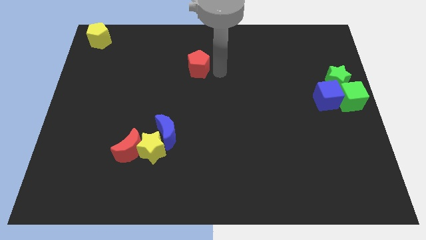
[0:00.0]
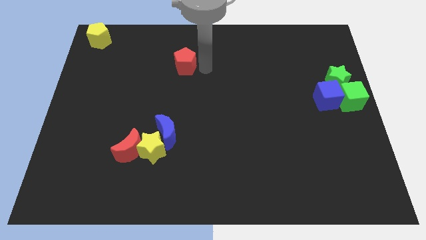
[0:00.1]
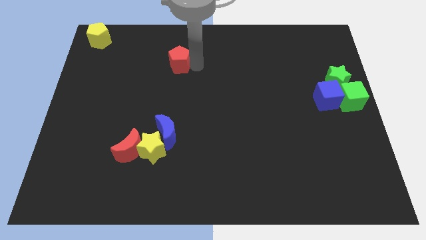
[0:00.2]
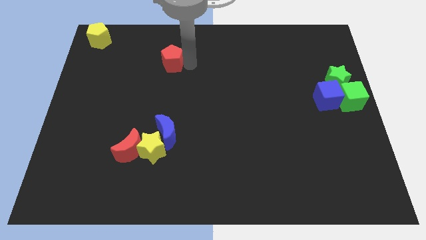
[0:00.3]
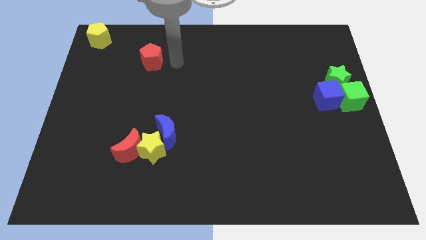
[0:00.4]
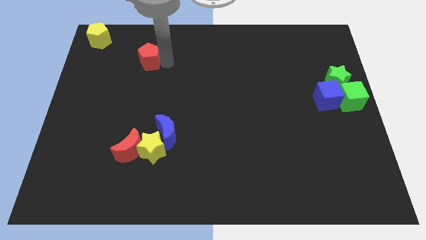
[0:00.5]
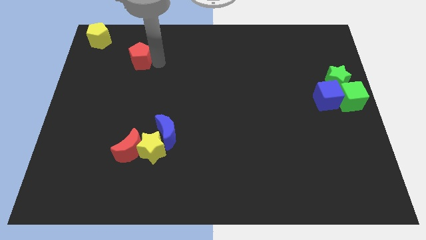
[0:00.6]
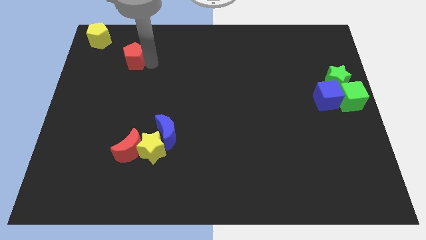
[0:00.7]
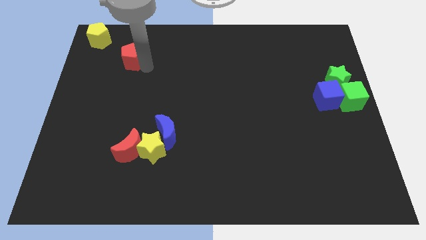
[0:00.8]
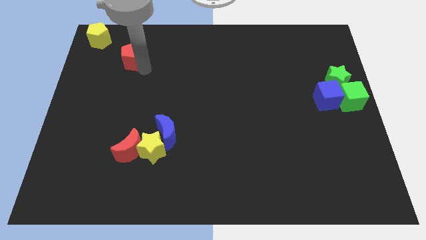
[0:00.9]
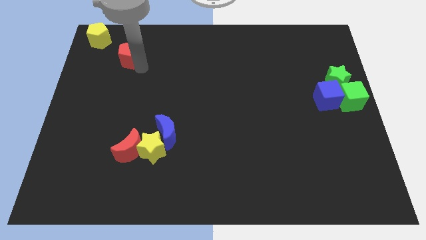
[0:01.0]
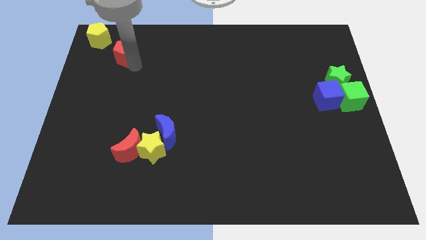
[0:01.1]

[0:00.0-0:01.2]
push red pentagon towards yellow pentagon

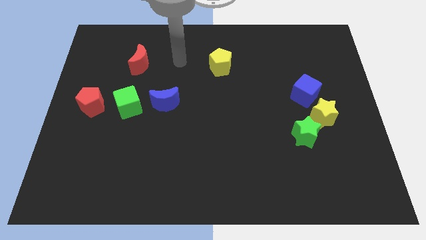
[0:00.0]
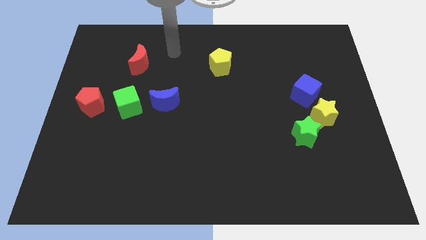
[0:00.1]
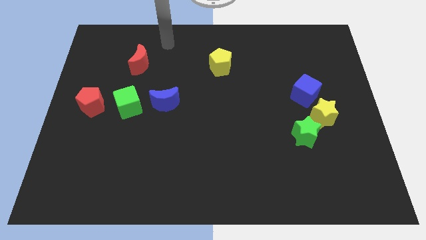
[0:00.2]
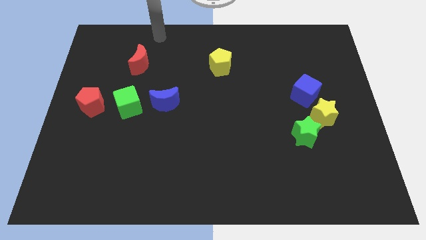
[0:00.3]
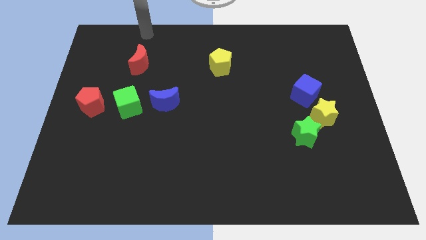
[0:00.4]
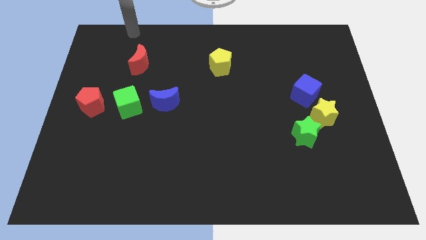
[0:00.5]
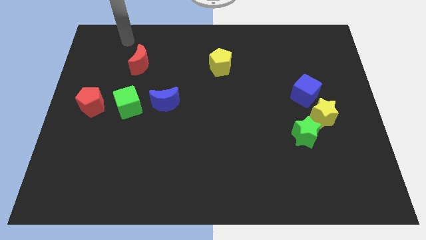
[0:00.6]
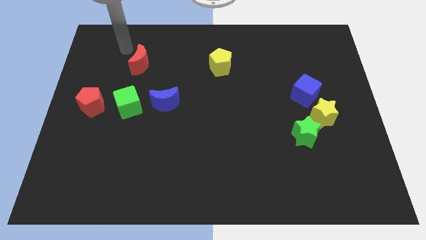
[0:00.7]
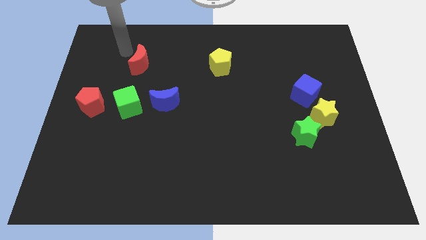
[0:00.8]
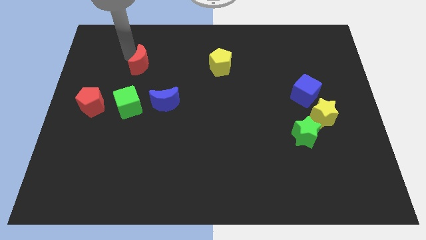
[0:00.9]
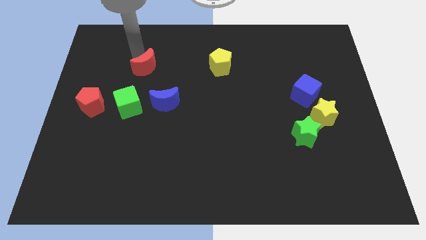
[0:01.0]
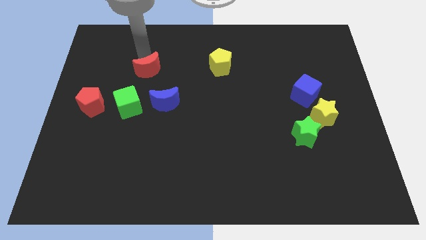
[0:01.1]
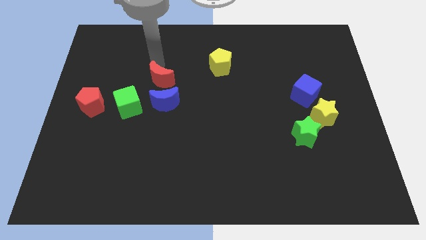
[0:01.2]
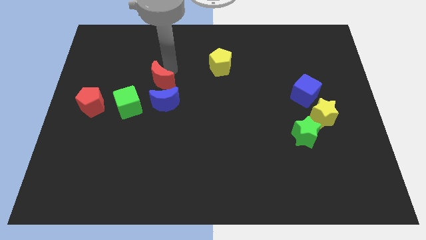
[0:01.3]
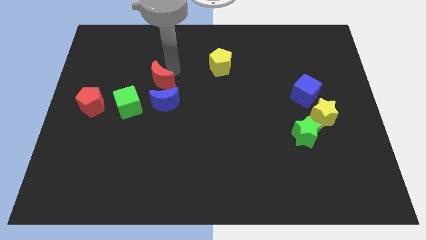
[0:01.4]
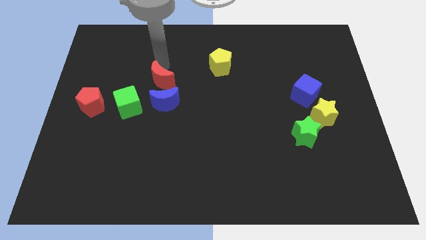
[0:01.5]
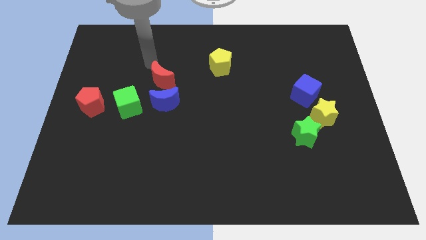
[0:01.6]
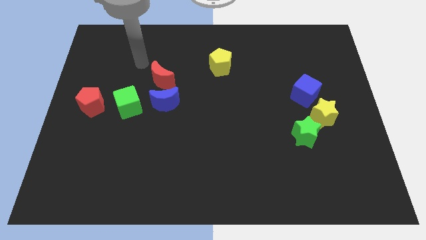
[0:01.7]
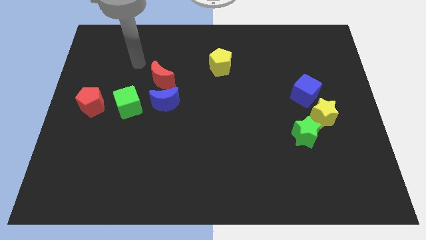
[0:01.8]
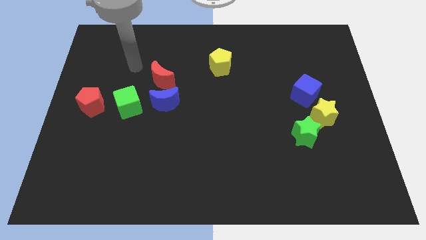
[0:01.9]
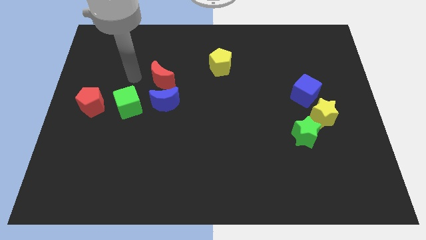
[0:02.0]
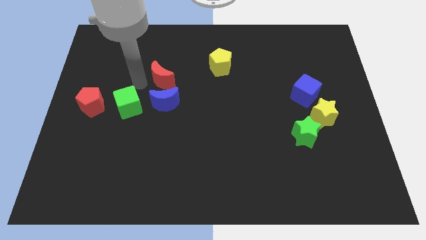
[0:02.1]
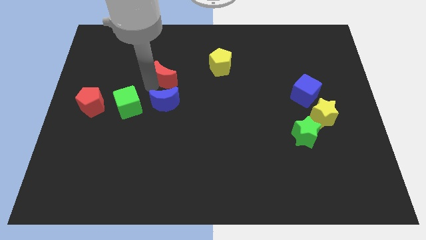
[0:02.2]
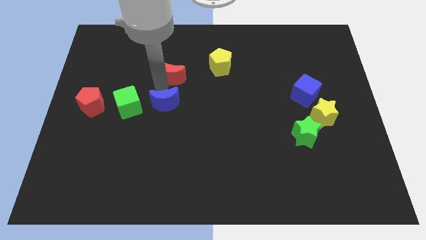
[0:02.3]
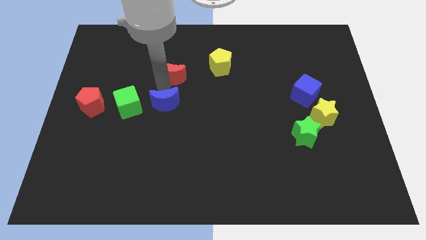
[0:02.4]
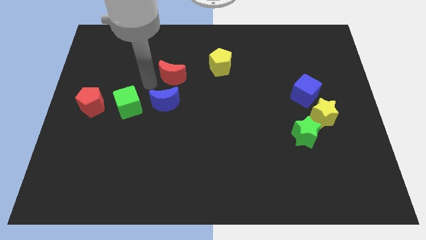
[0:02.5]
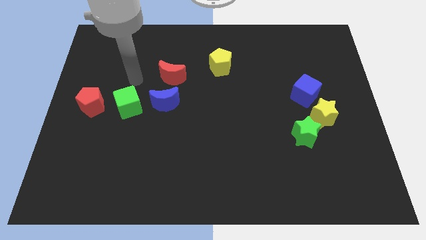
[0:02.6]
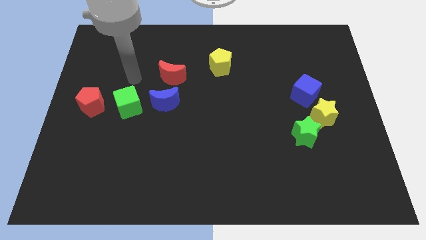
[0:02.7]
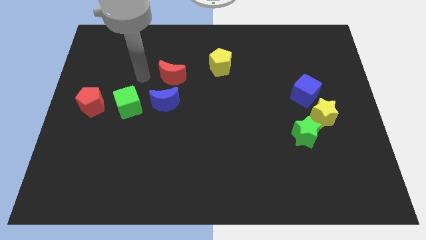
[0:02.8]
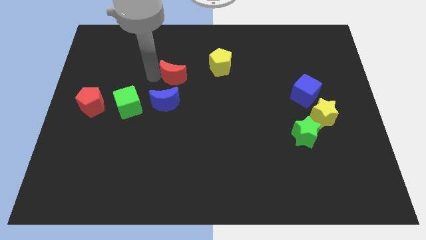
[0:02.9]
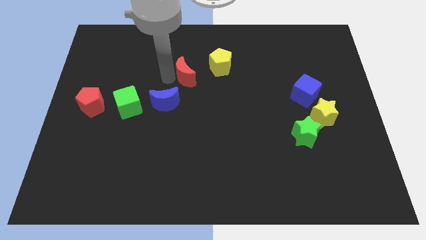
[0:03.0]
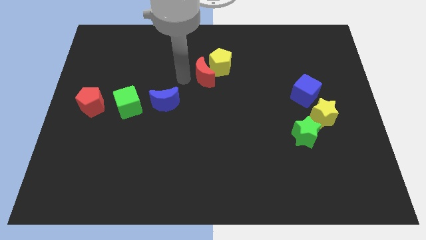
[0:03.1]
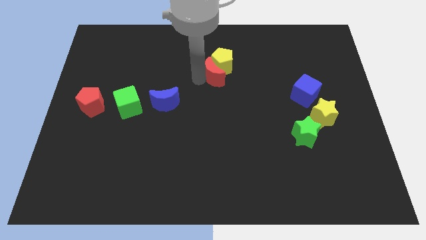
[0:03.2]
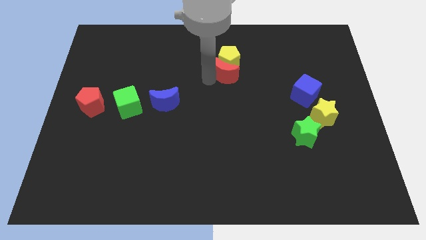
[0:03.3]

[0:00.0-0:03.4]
push the red crescent below the yellow pentagon

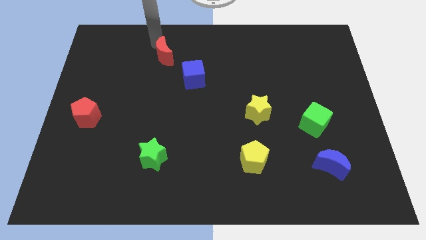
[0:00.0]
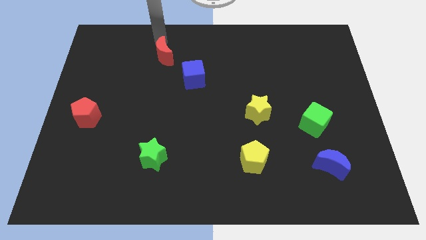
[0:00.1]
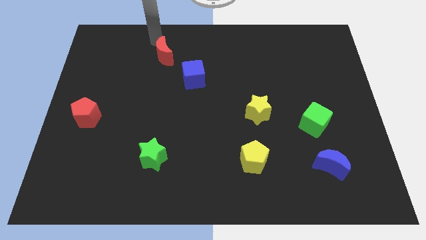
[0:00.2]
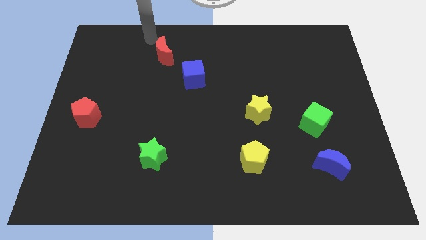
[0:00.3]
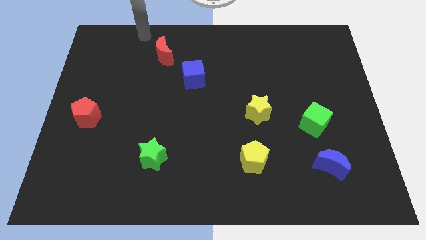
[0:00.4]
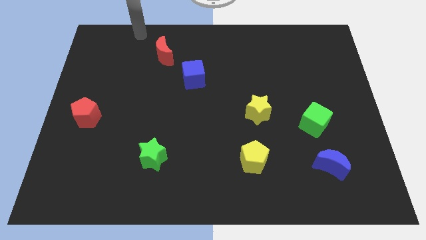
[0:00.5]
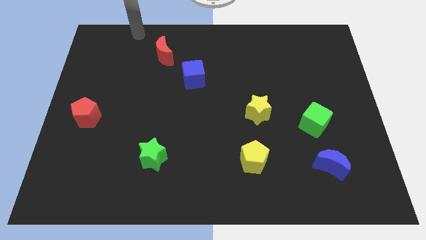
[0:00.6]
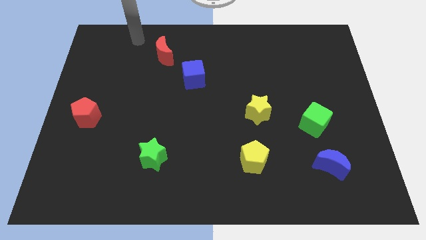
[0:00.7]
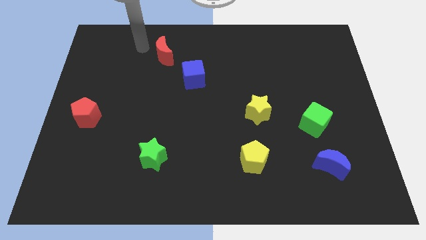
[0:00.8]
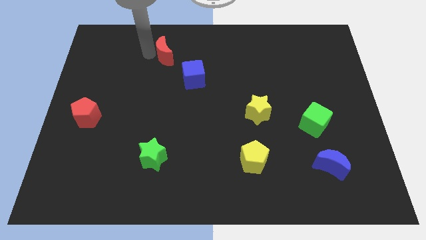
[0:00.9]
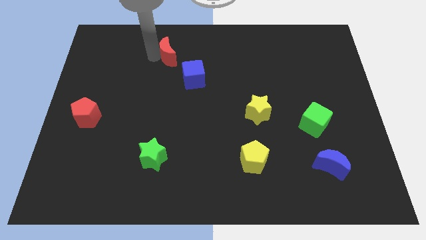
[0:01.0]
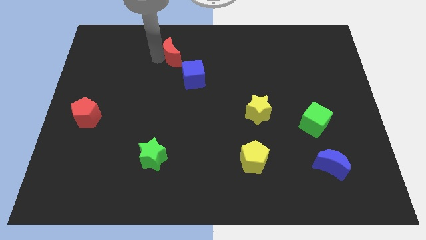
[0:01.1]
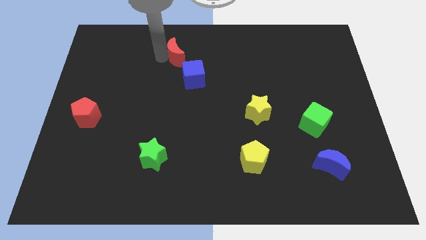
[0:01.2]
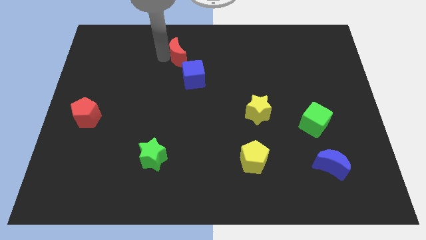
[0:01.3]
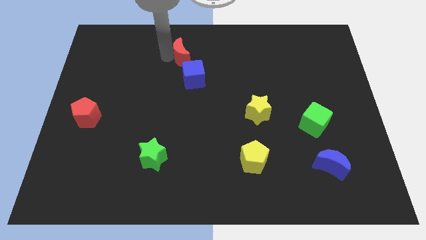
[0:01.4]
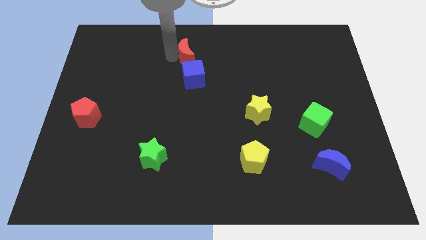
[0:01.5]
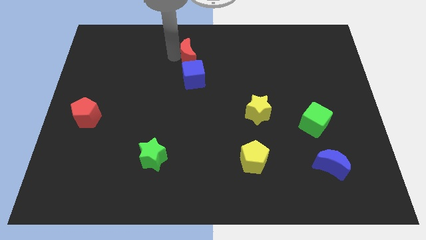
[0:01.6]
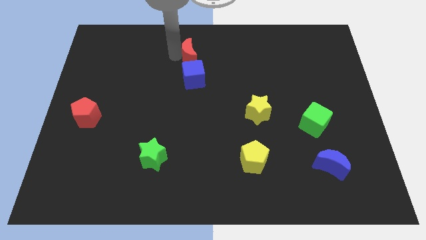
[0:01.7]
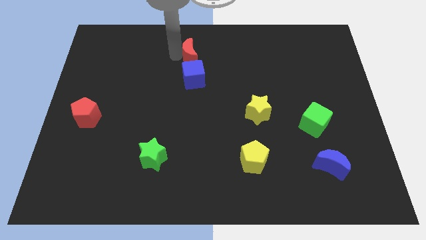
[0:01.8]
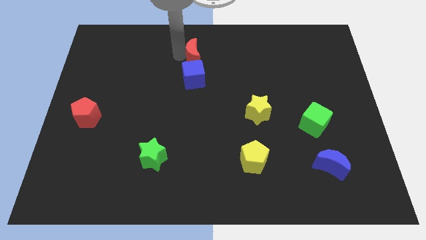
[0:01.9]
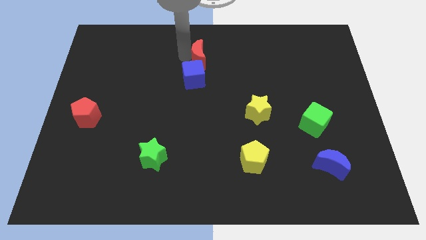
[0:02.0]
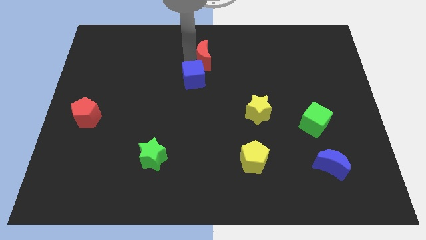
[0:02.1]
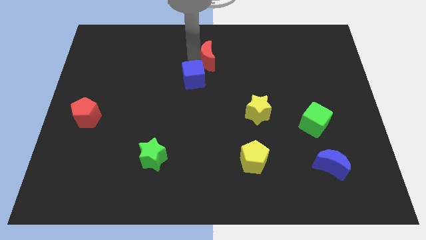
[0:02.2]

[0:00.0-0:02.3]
place the red moon at the top of the blue cube

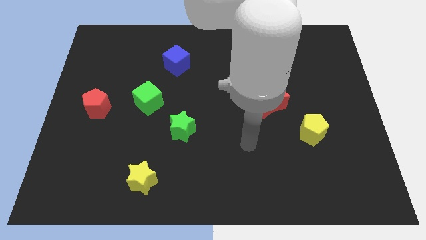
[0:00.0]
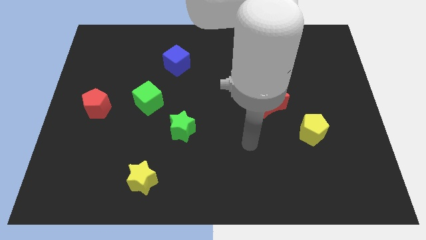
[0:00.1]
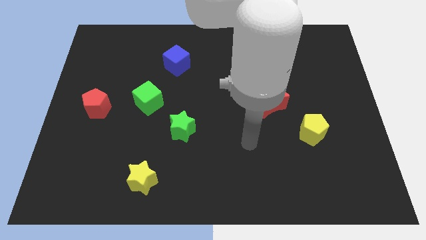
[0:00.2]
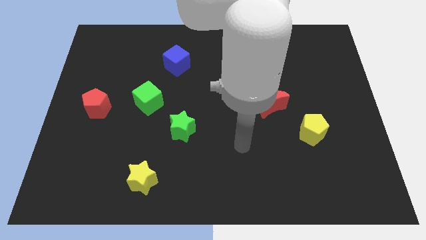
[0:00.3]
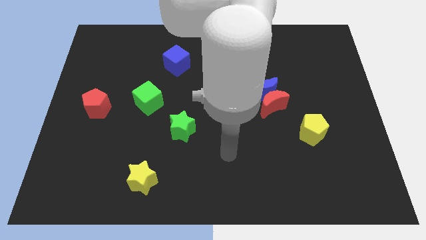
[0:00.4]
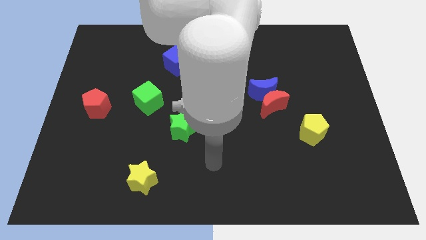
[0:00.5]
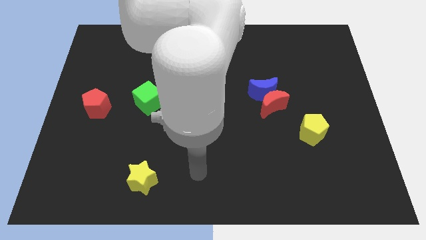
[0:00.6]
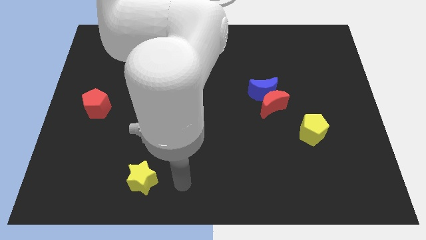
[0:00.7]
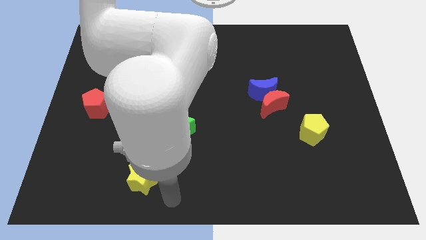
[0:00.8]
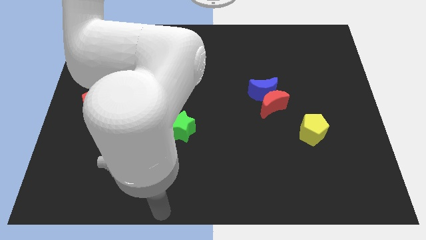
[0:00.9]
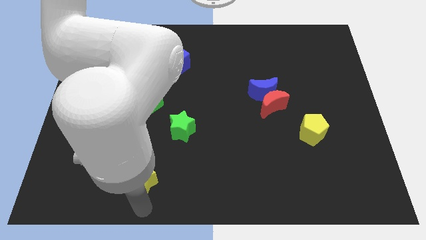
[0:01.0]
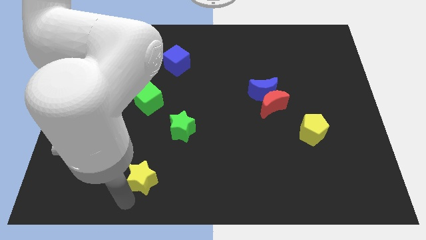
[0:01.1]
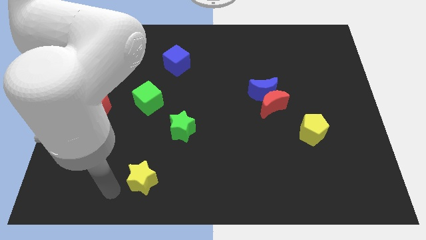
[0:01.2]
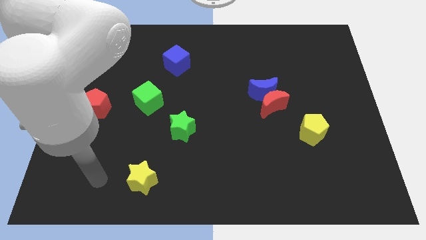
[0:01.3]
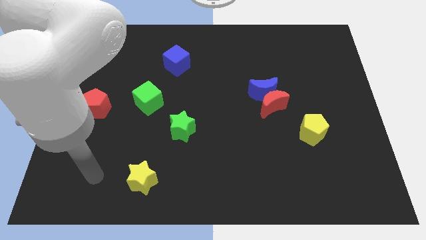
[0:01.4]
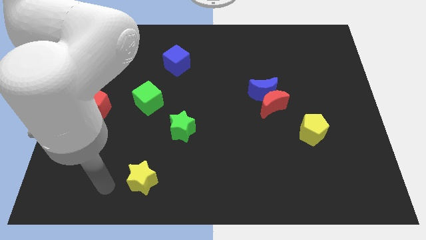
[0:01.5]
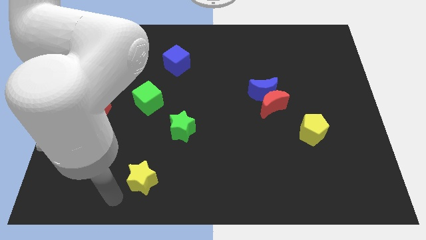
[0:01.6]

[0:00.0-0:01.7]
move your arm towards the yellow star

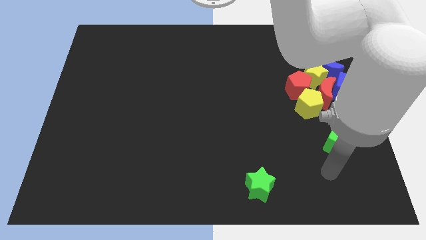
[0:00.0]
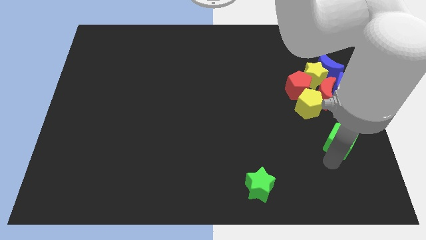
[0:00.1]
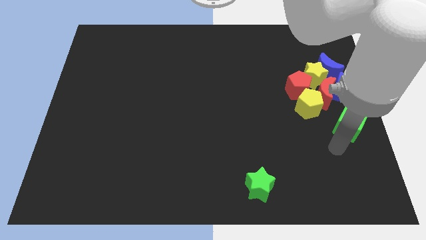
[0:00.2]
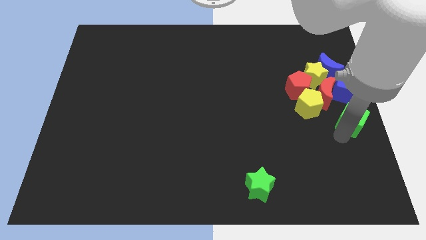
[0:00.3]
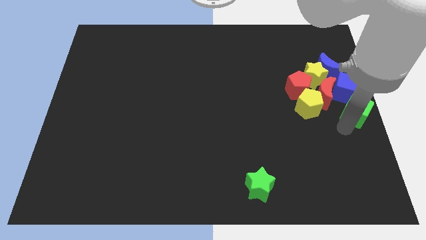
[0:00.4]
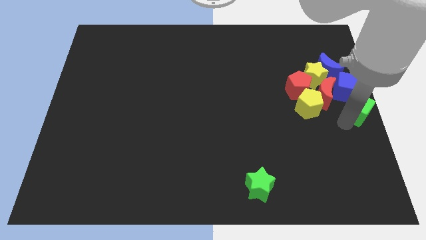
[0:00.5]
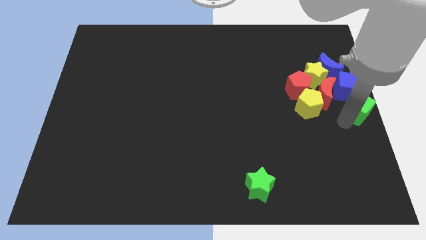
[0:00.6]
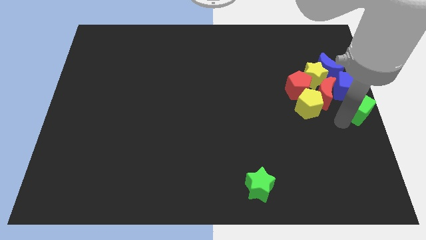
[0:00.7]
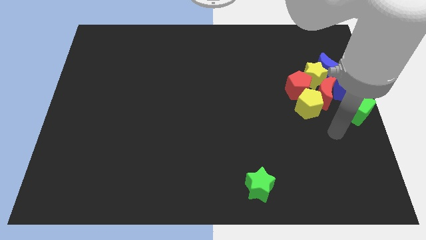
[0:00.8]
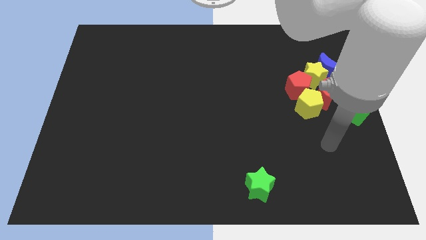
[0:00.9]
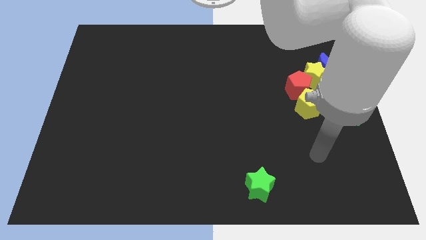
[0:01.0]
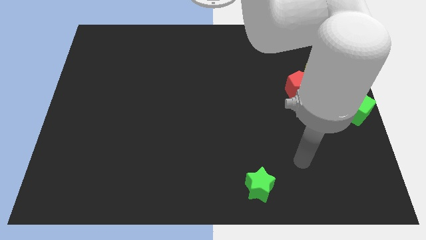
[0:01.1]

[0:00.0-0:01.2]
place green cube below blue cube
